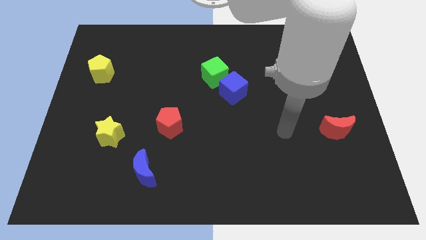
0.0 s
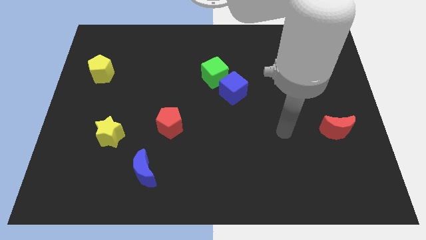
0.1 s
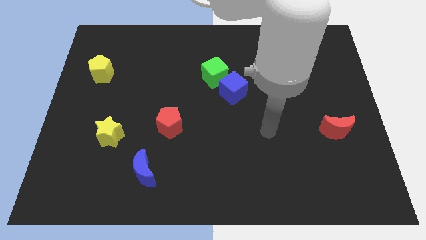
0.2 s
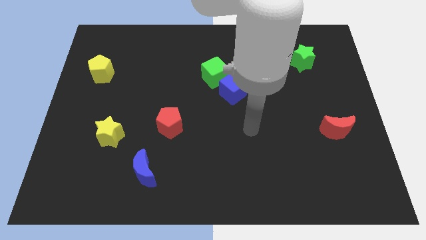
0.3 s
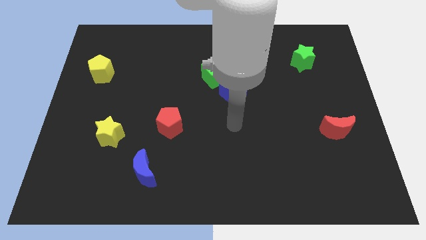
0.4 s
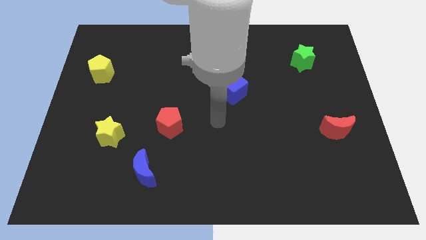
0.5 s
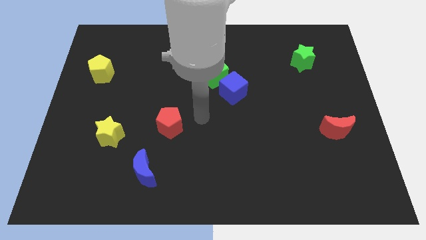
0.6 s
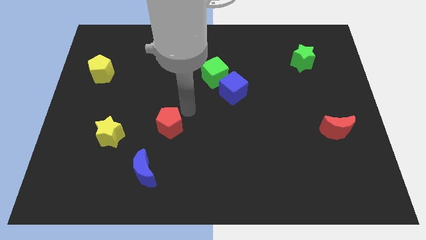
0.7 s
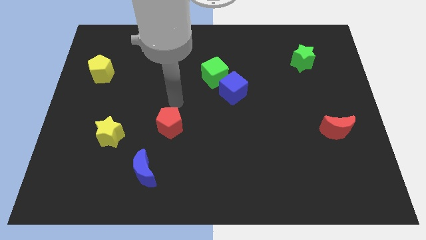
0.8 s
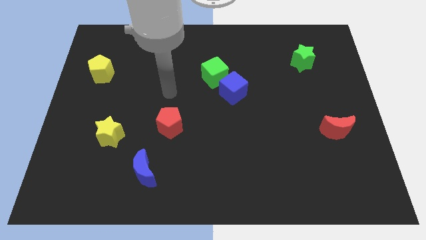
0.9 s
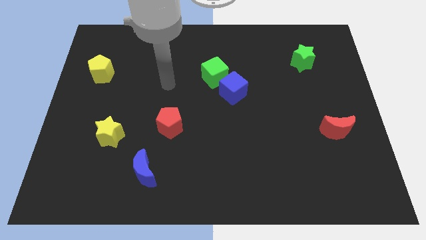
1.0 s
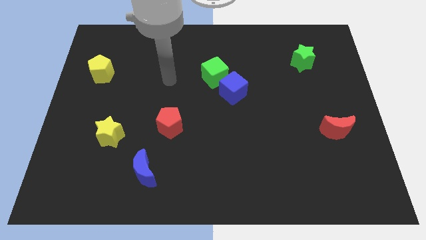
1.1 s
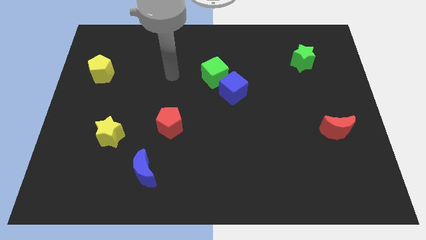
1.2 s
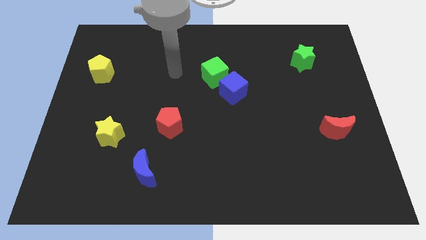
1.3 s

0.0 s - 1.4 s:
point the arm to the left of the green cube

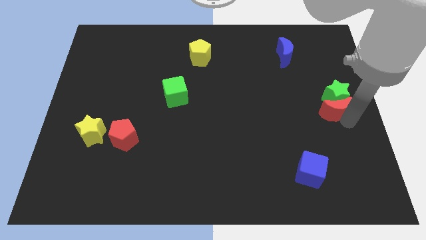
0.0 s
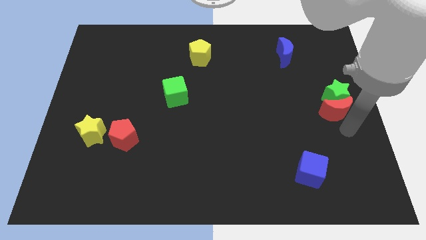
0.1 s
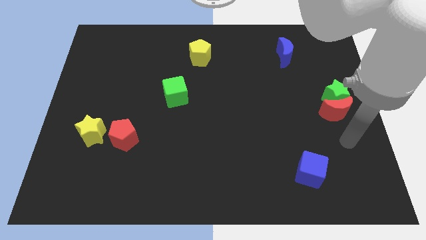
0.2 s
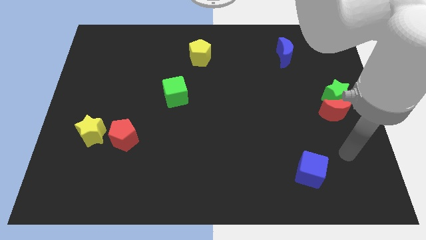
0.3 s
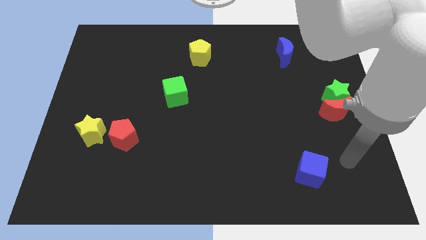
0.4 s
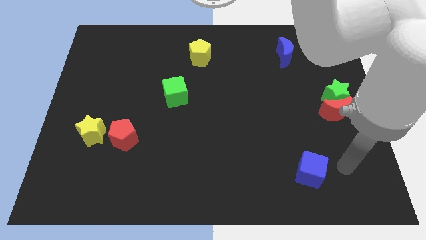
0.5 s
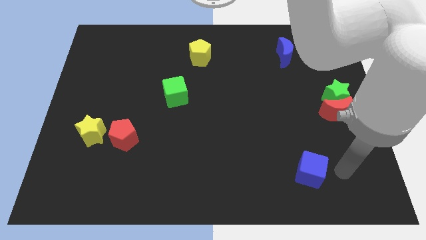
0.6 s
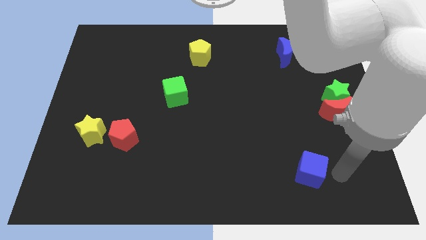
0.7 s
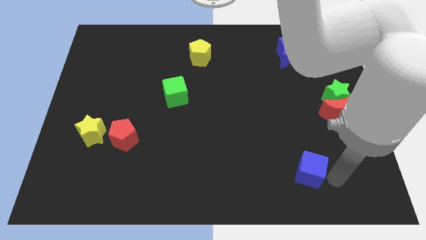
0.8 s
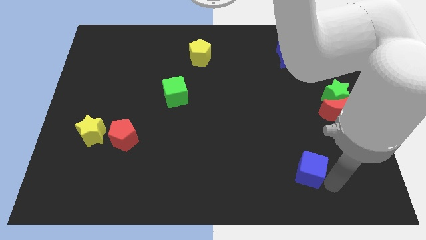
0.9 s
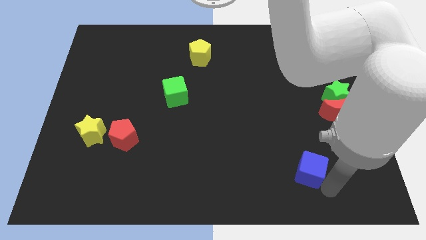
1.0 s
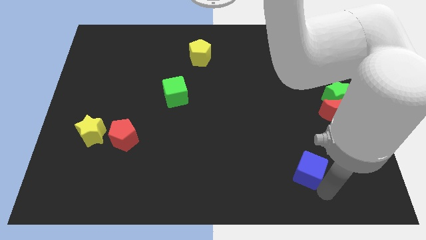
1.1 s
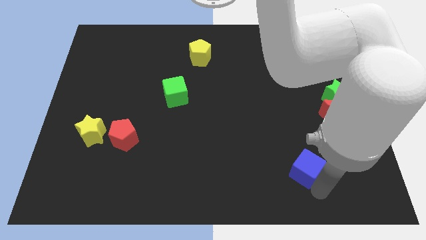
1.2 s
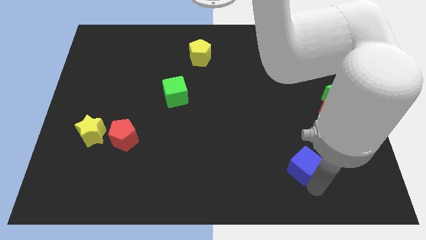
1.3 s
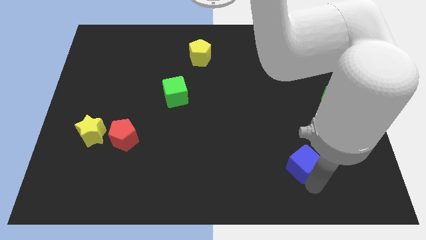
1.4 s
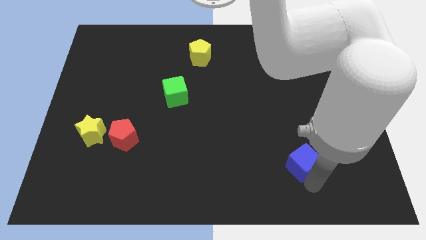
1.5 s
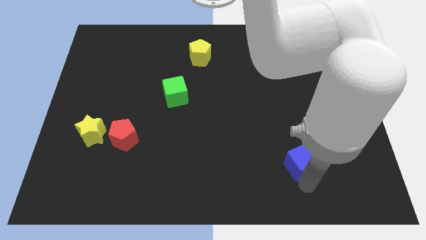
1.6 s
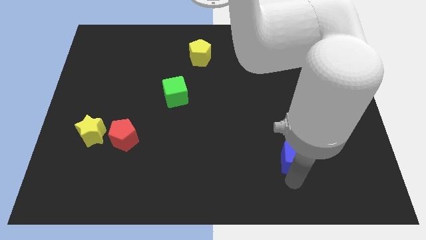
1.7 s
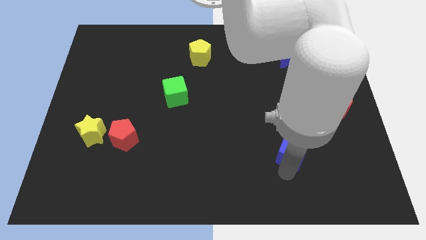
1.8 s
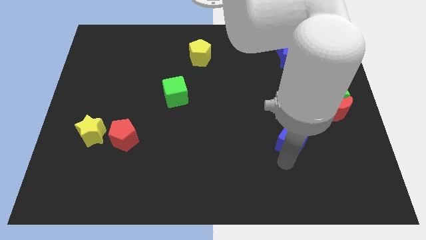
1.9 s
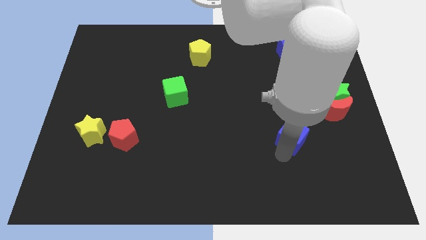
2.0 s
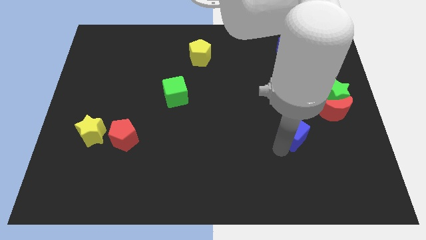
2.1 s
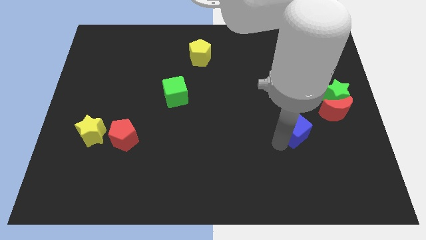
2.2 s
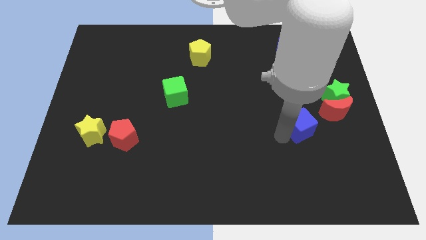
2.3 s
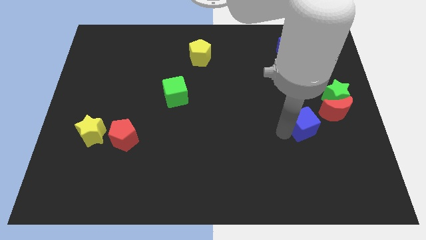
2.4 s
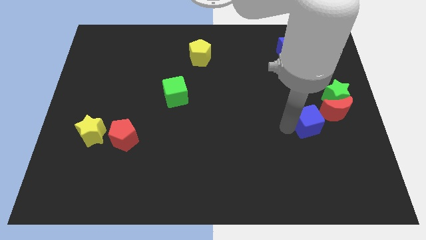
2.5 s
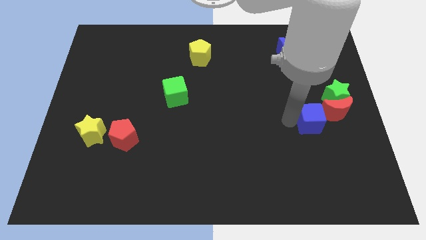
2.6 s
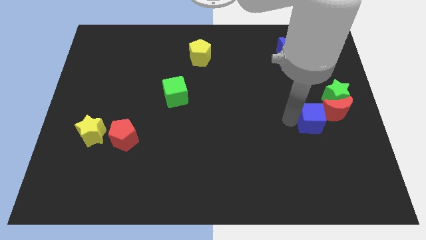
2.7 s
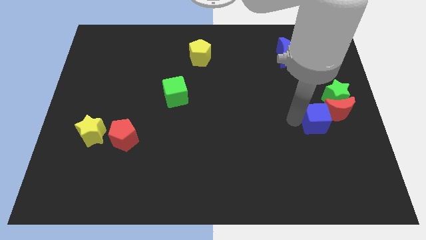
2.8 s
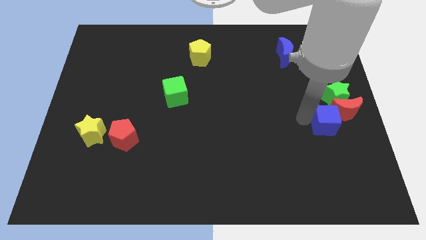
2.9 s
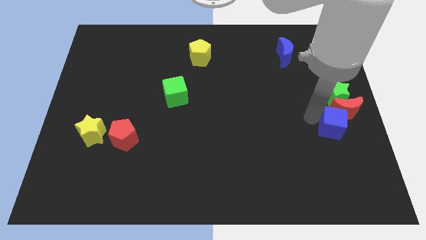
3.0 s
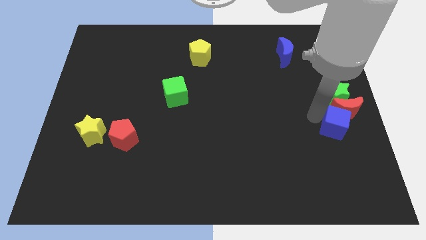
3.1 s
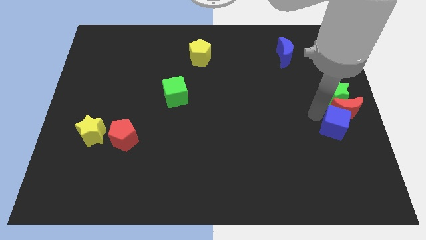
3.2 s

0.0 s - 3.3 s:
place the blue cube at the bottom of the red crescent

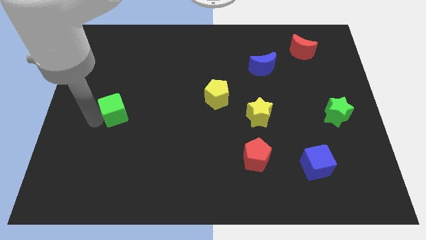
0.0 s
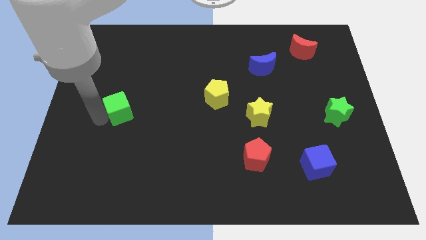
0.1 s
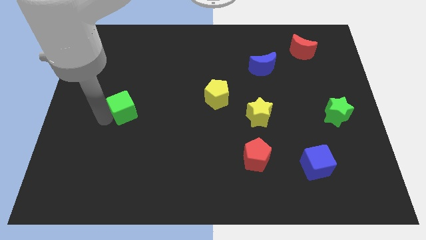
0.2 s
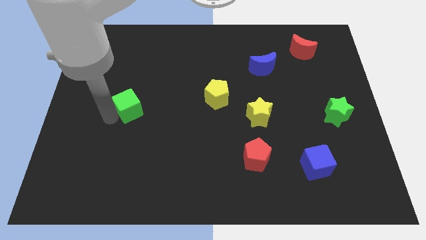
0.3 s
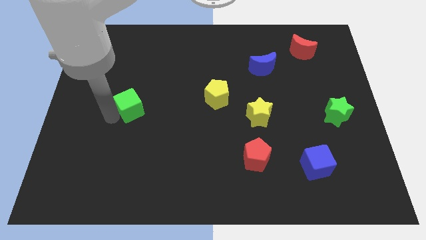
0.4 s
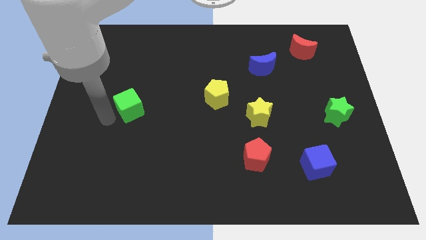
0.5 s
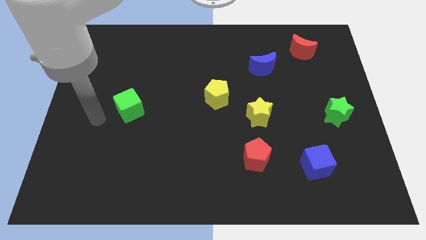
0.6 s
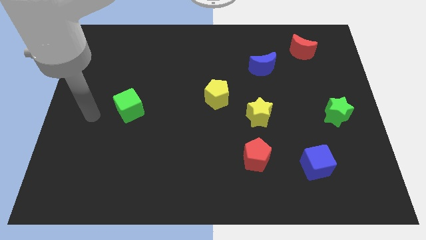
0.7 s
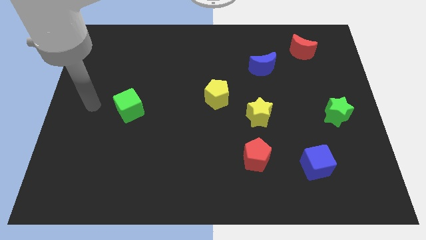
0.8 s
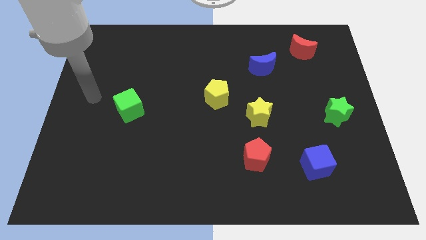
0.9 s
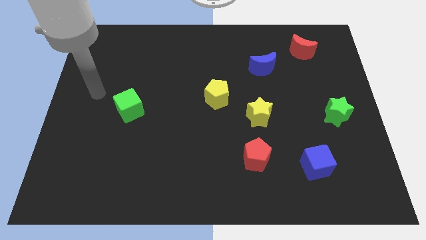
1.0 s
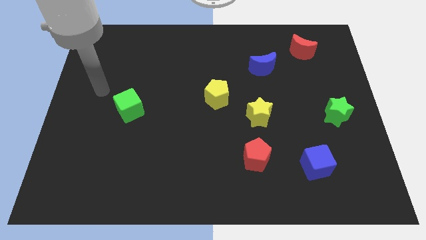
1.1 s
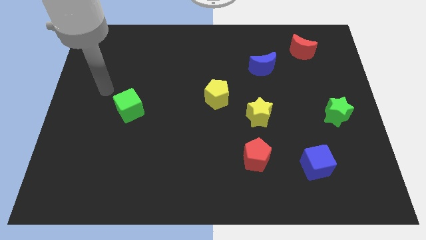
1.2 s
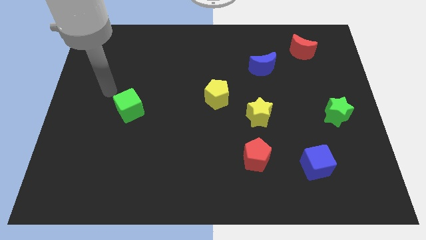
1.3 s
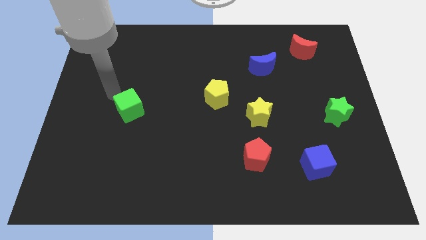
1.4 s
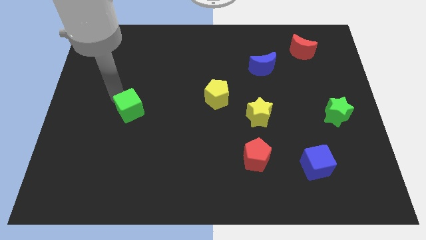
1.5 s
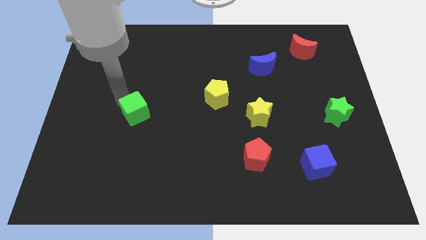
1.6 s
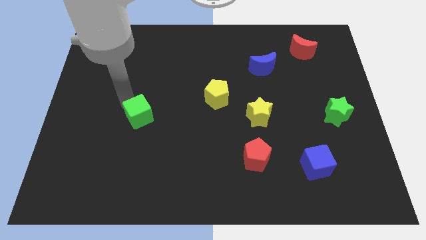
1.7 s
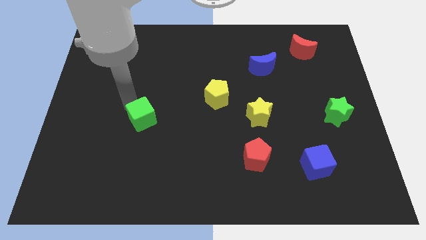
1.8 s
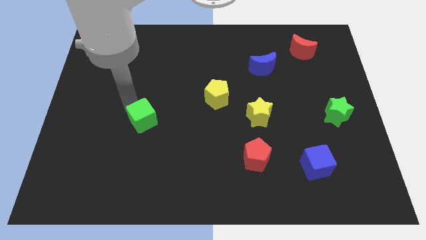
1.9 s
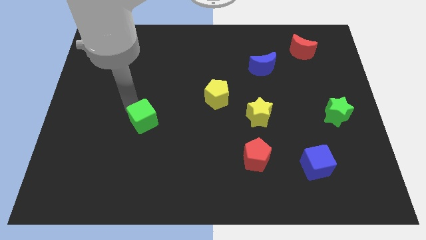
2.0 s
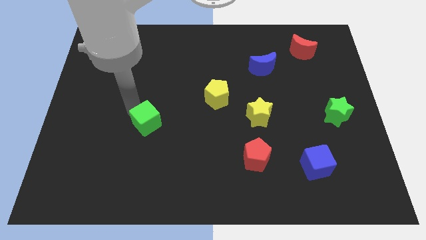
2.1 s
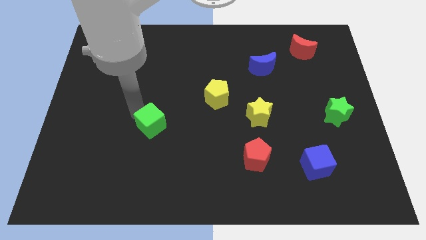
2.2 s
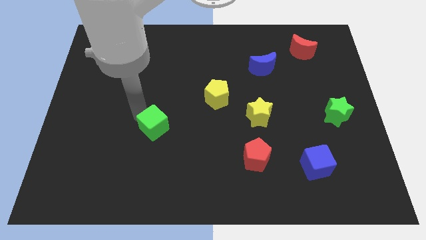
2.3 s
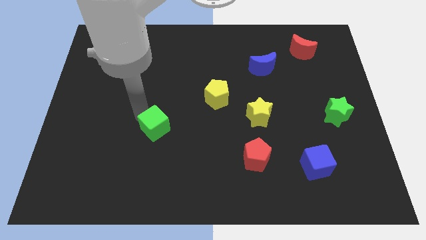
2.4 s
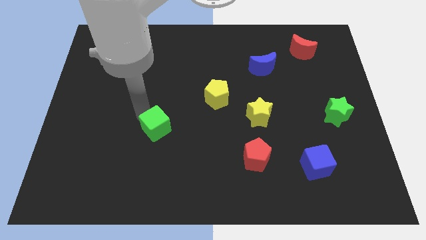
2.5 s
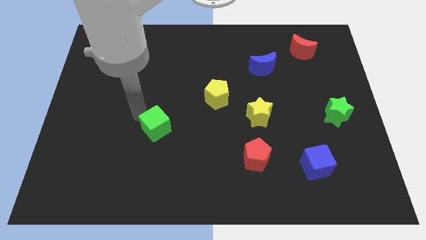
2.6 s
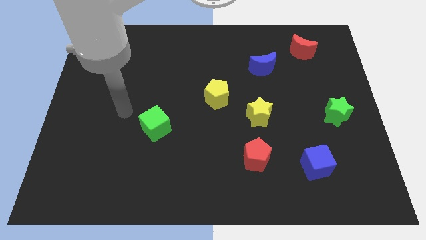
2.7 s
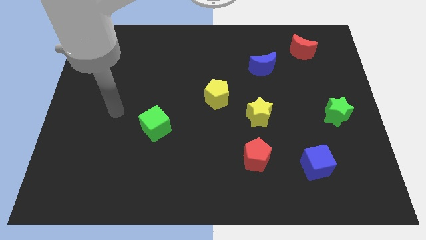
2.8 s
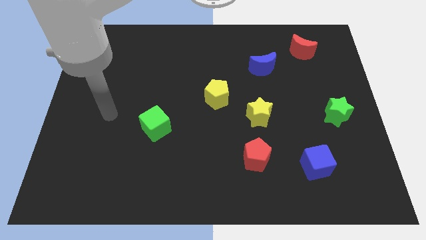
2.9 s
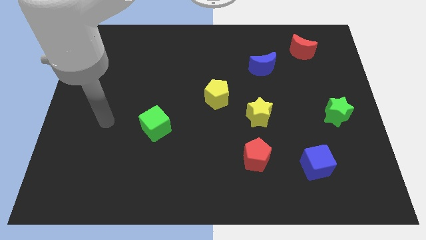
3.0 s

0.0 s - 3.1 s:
place green cube to the bottom left of the yellow pentagon

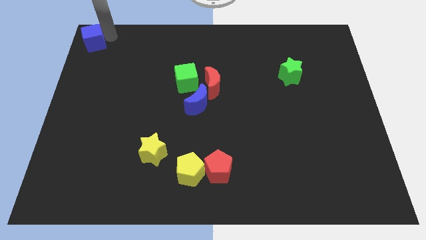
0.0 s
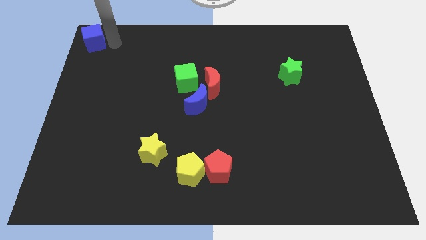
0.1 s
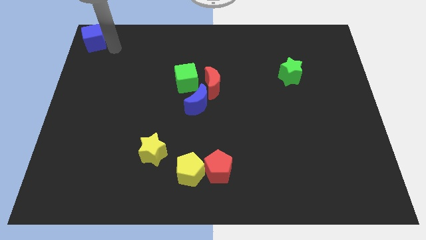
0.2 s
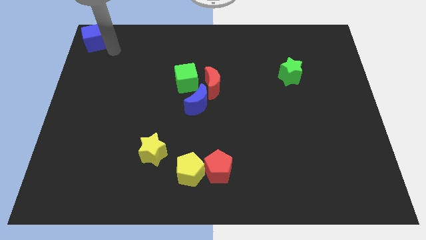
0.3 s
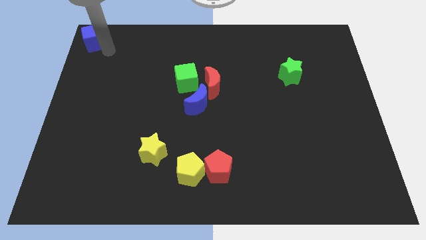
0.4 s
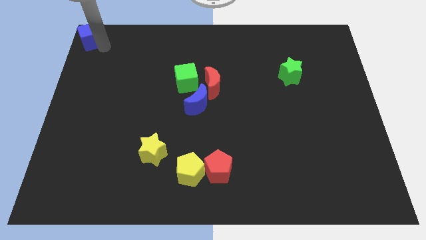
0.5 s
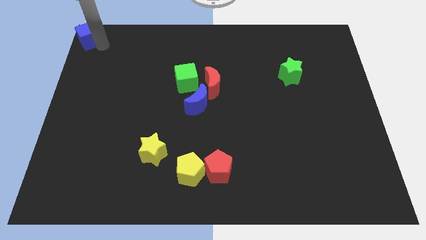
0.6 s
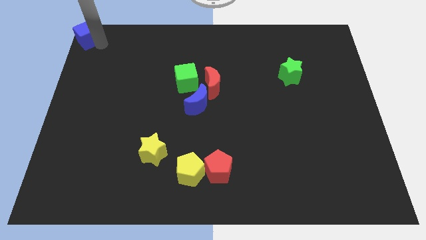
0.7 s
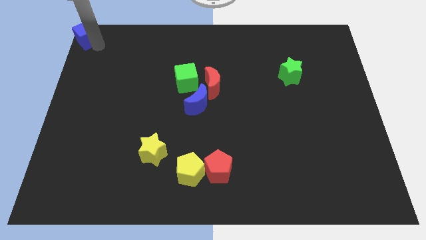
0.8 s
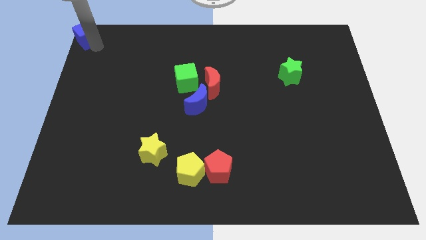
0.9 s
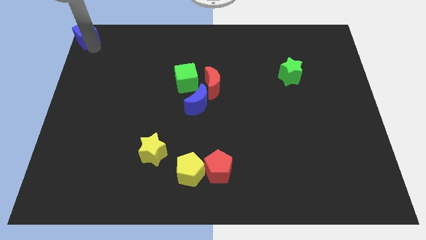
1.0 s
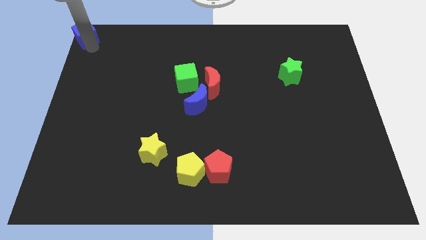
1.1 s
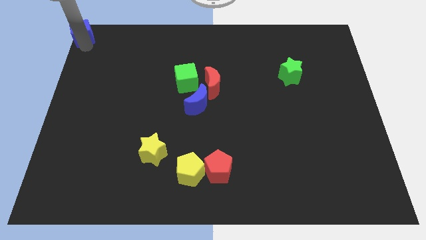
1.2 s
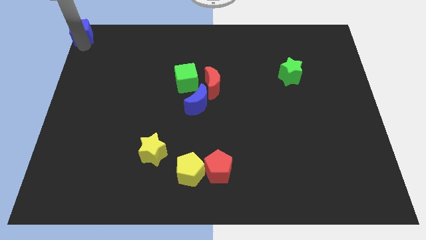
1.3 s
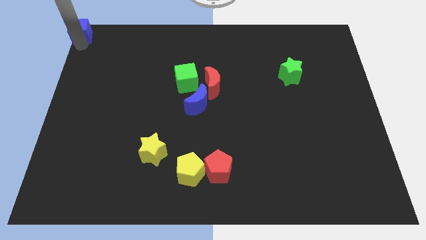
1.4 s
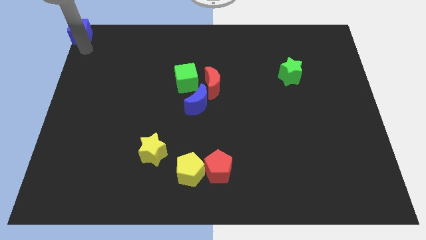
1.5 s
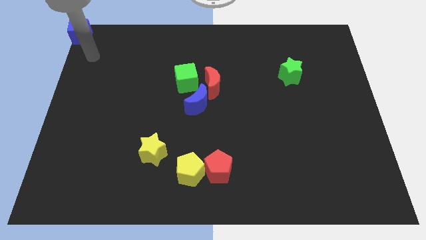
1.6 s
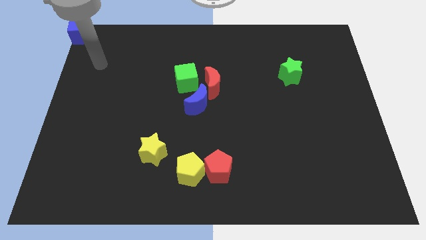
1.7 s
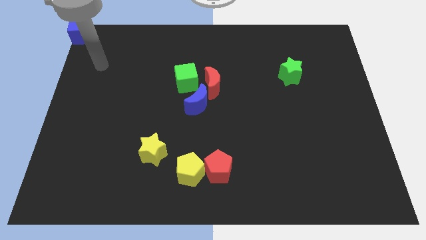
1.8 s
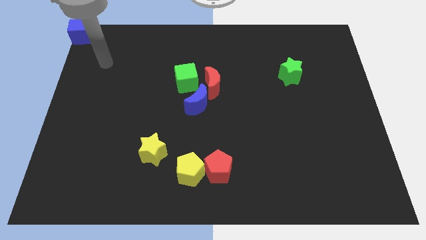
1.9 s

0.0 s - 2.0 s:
place the blue moon to the top left corner
